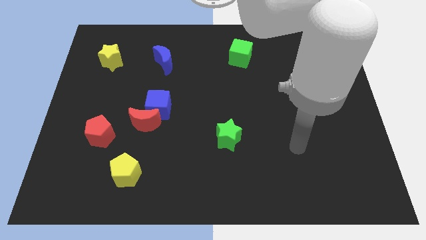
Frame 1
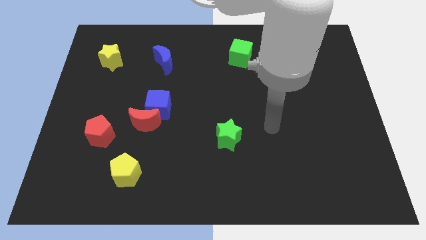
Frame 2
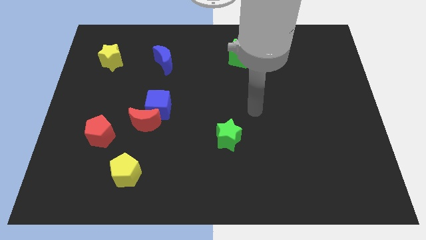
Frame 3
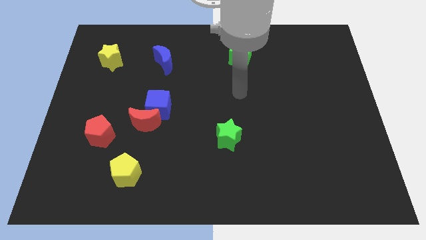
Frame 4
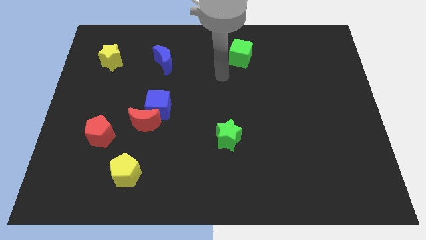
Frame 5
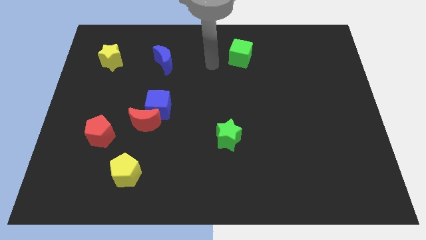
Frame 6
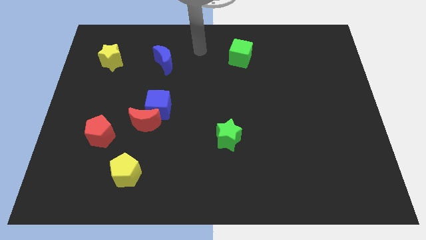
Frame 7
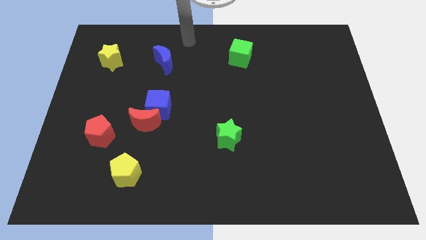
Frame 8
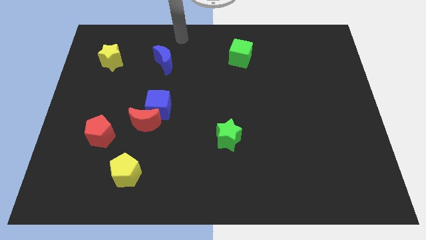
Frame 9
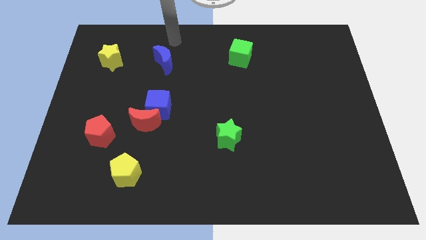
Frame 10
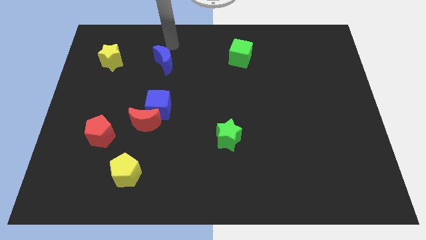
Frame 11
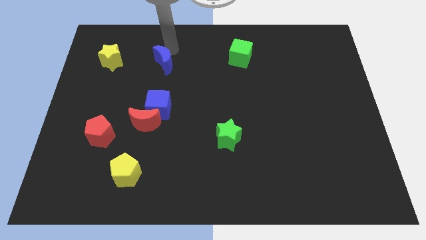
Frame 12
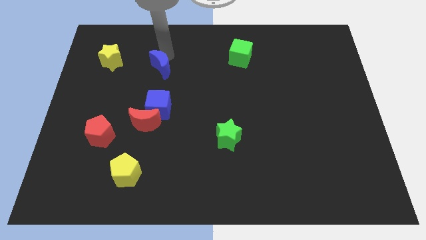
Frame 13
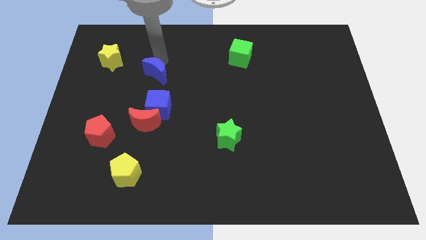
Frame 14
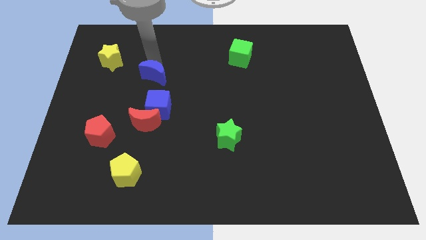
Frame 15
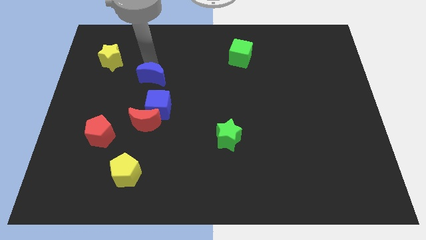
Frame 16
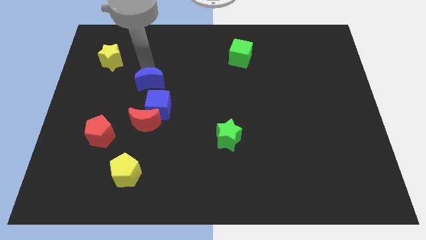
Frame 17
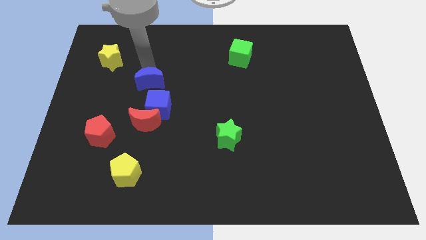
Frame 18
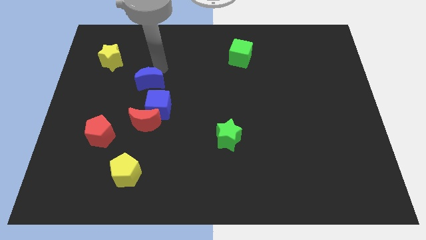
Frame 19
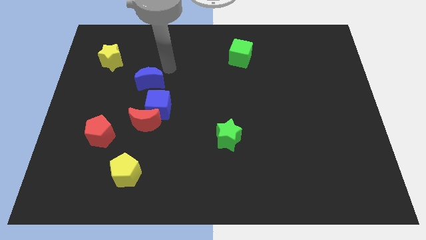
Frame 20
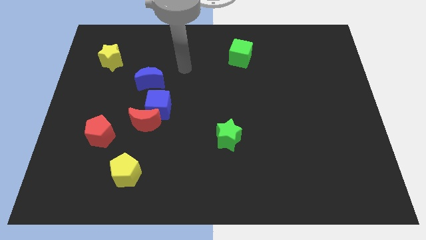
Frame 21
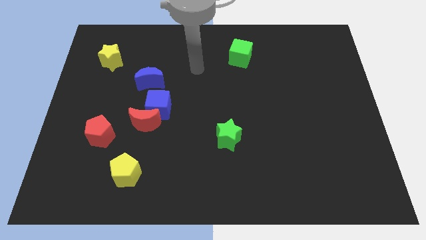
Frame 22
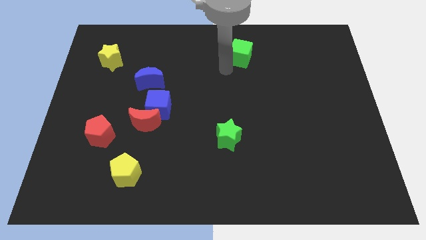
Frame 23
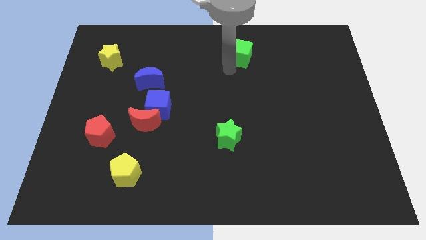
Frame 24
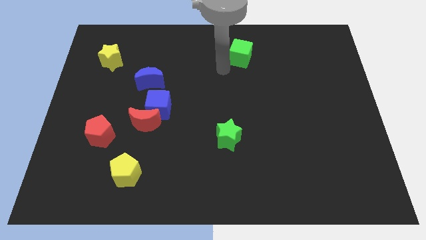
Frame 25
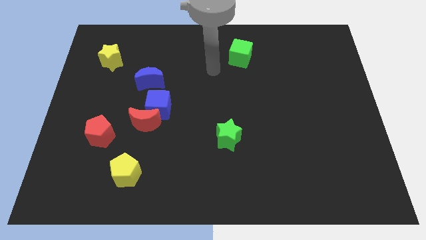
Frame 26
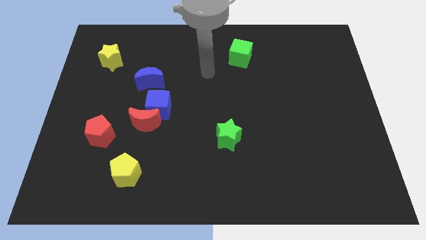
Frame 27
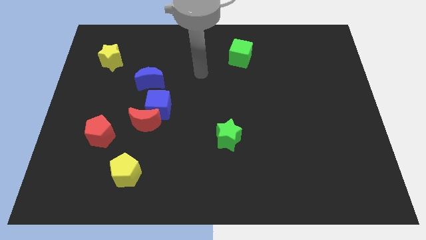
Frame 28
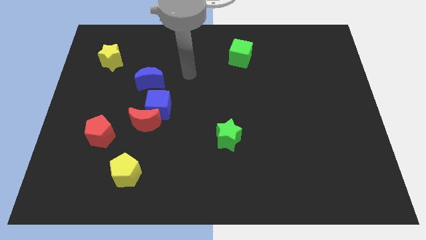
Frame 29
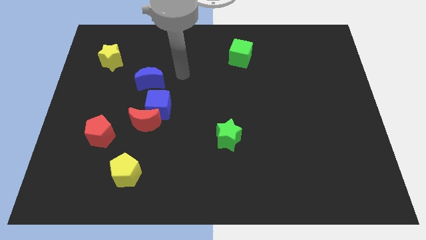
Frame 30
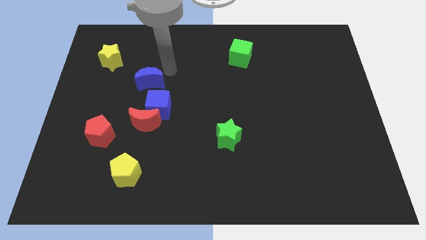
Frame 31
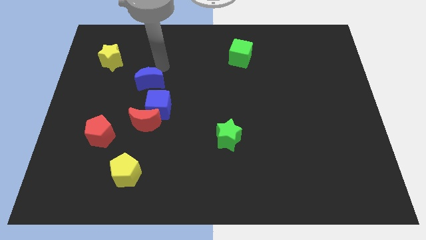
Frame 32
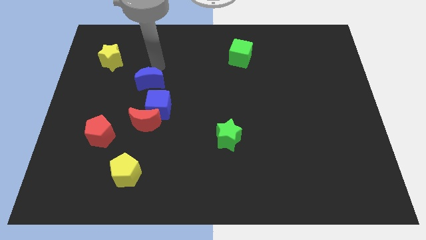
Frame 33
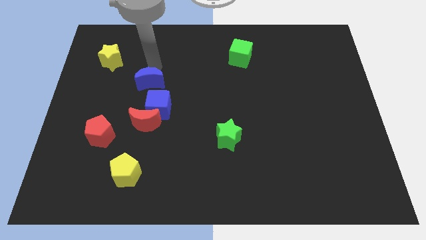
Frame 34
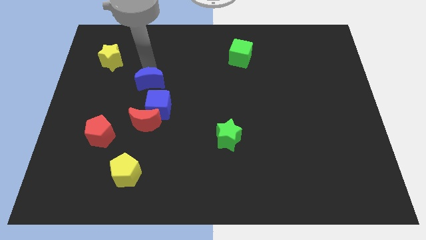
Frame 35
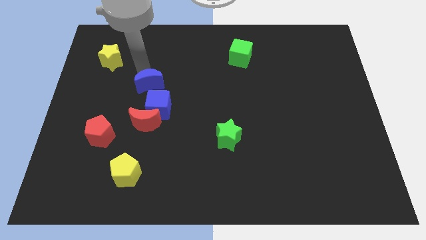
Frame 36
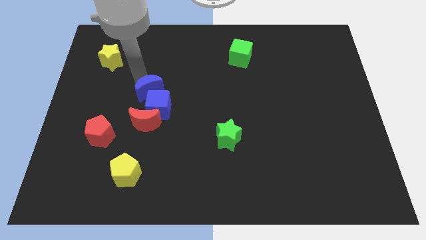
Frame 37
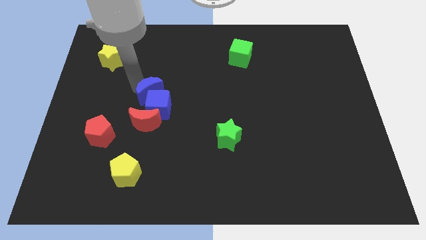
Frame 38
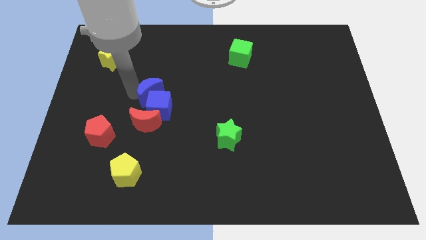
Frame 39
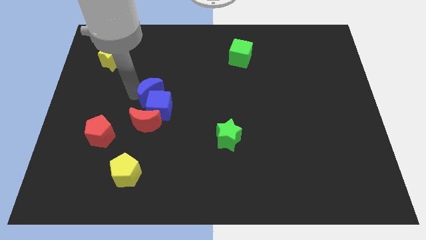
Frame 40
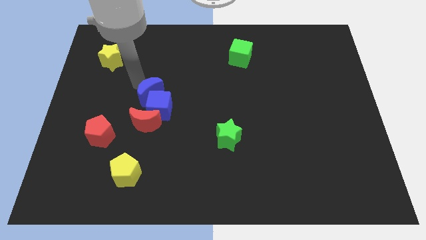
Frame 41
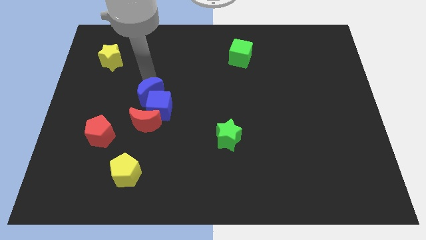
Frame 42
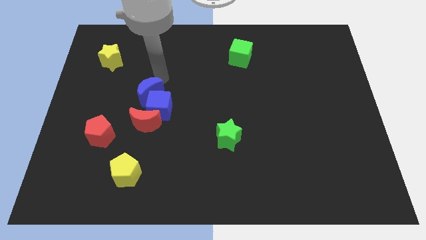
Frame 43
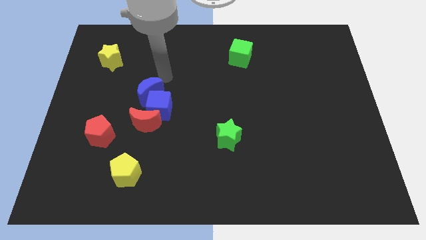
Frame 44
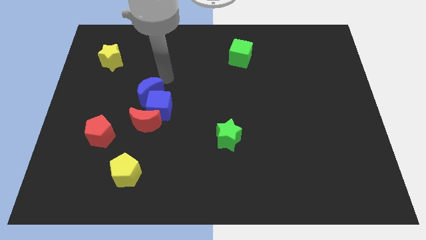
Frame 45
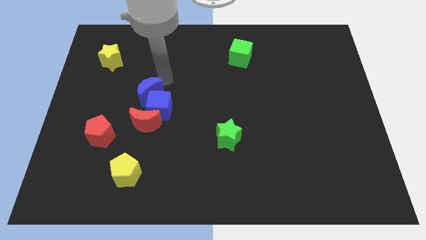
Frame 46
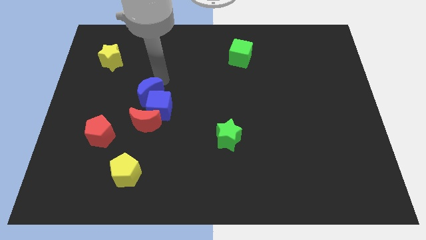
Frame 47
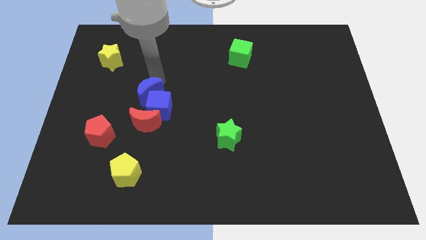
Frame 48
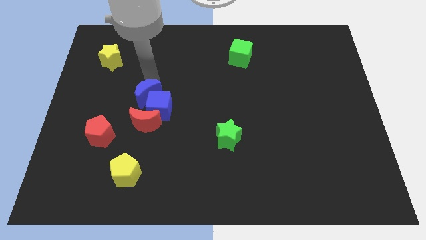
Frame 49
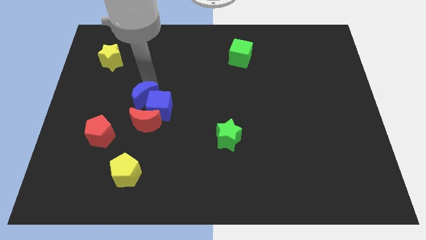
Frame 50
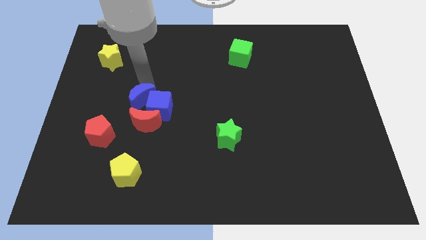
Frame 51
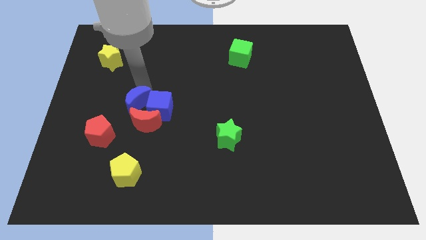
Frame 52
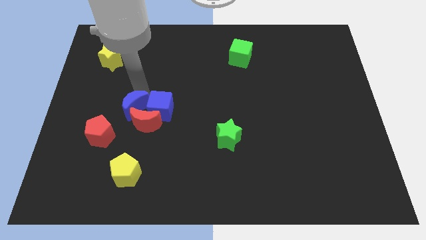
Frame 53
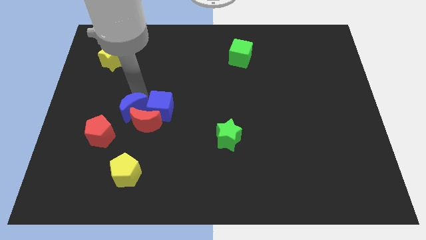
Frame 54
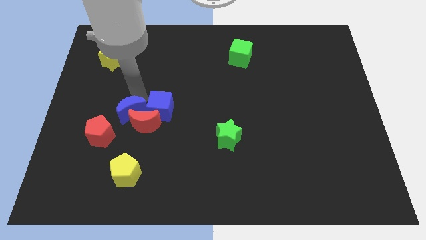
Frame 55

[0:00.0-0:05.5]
slide the blue moon close to the red moon

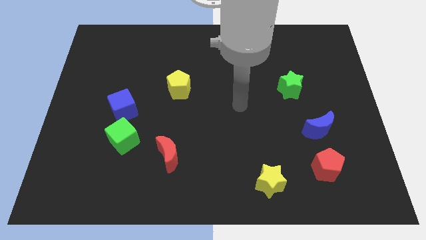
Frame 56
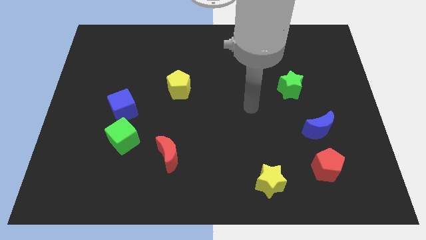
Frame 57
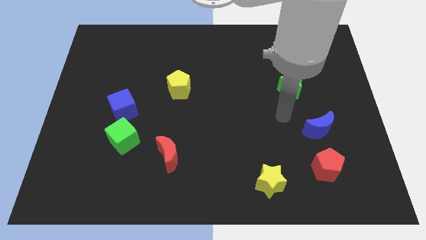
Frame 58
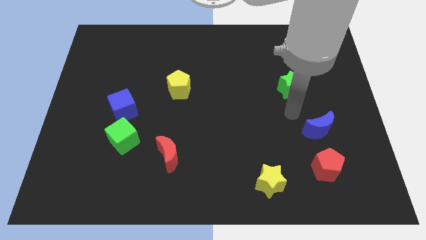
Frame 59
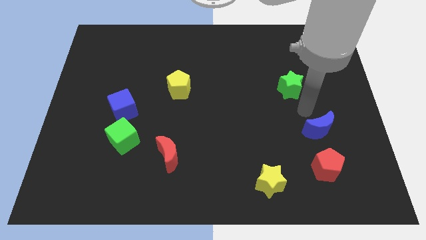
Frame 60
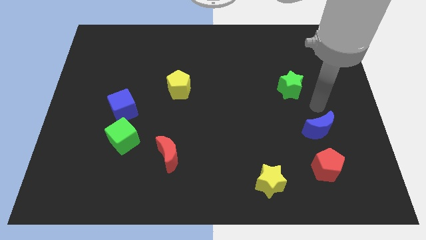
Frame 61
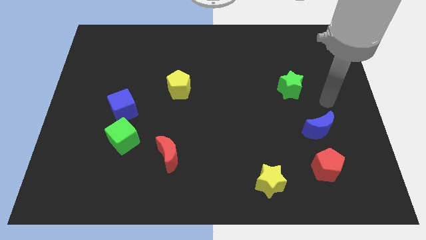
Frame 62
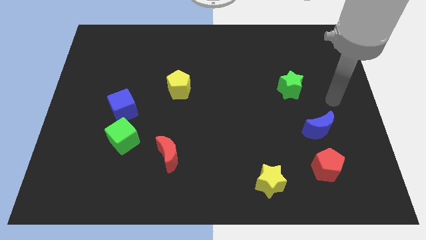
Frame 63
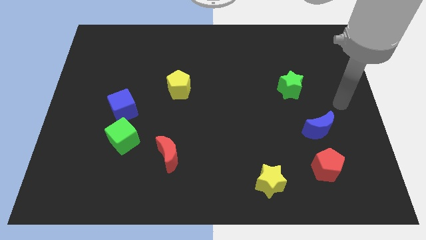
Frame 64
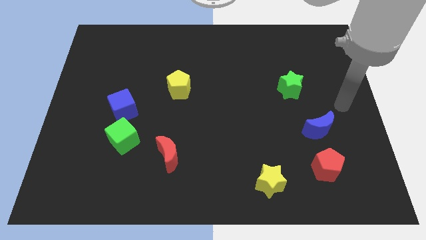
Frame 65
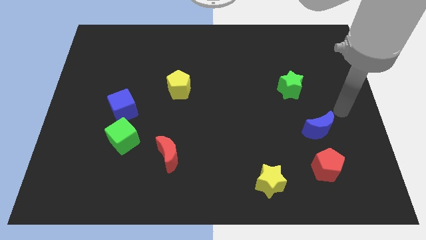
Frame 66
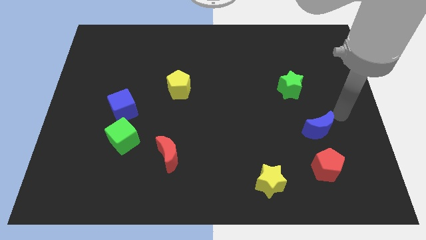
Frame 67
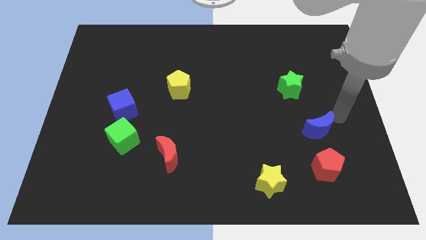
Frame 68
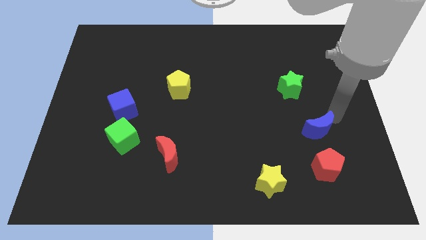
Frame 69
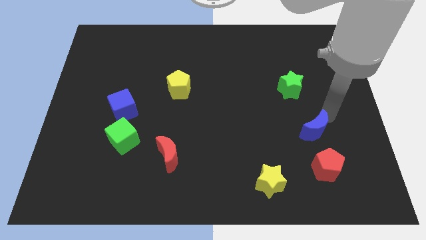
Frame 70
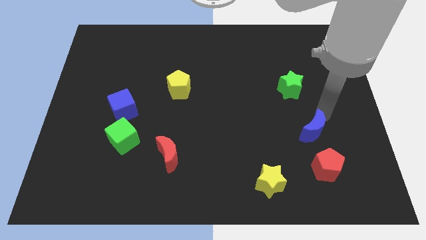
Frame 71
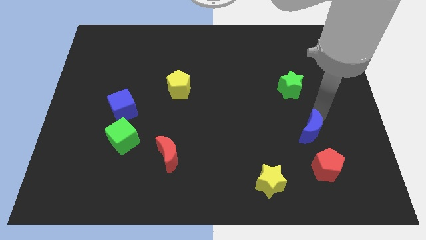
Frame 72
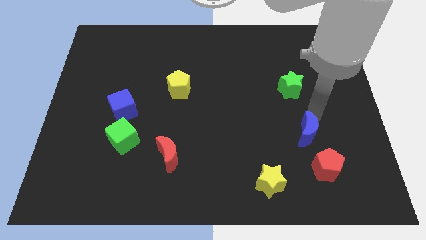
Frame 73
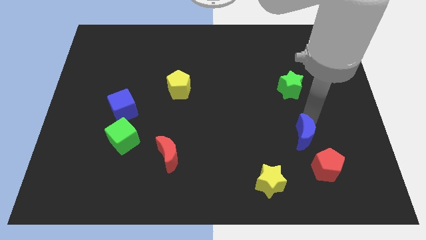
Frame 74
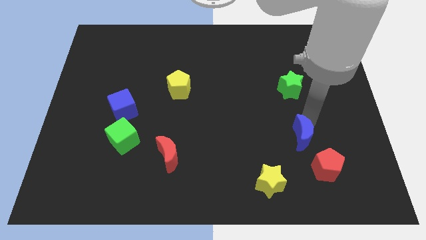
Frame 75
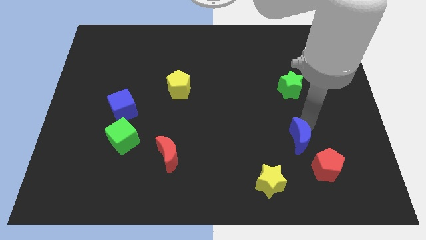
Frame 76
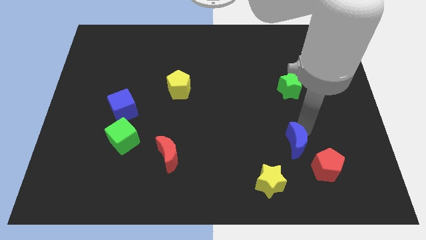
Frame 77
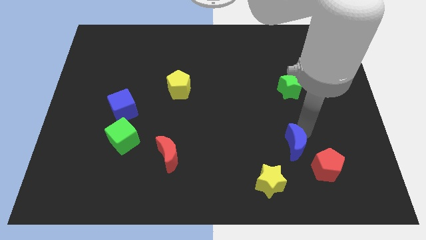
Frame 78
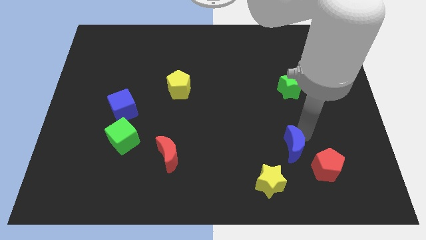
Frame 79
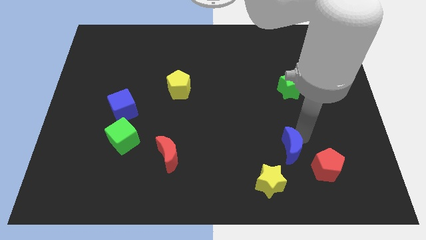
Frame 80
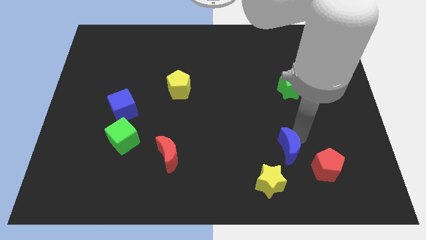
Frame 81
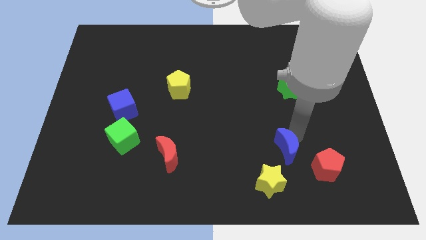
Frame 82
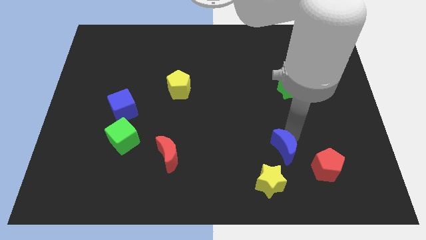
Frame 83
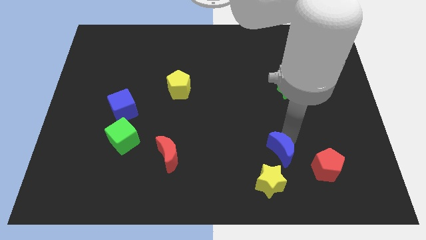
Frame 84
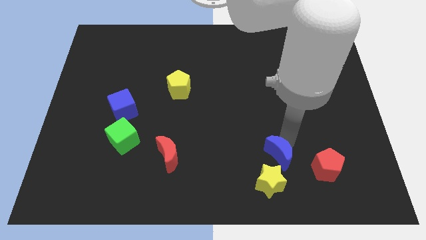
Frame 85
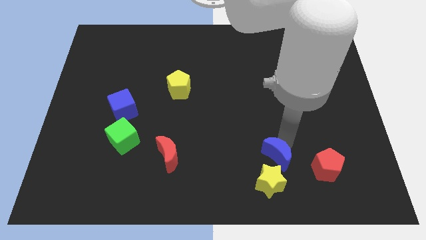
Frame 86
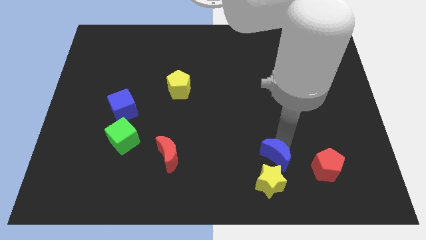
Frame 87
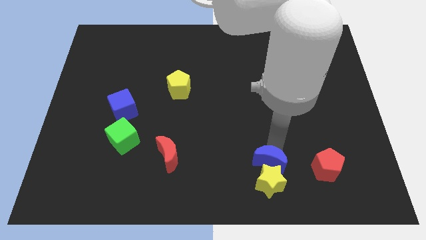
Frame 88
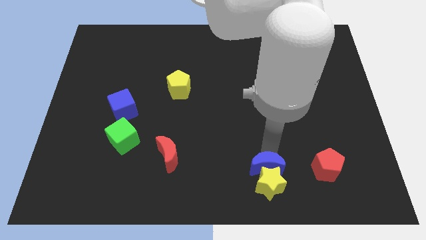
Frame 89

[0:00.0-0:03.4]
push the blue moon next to the yellow star
